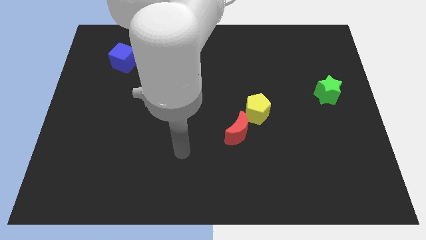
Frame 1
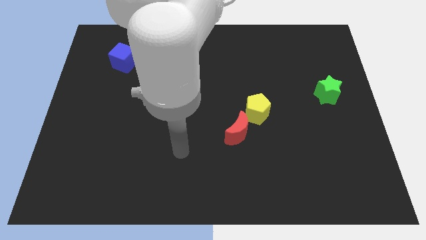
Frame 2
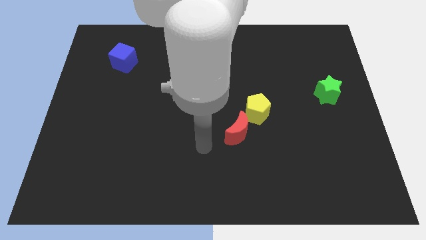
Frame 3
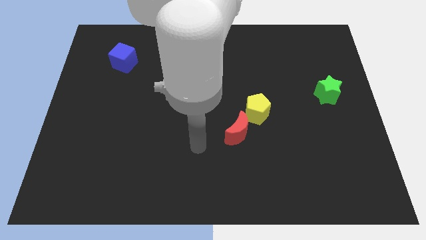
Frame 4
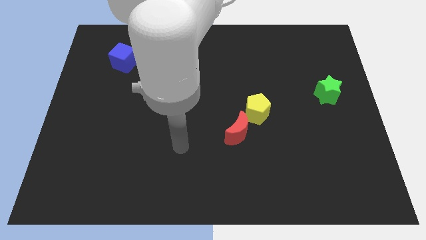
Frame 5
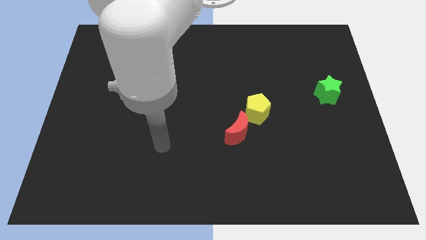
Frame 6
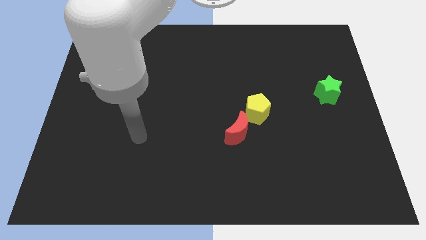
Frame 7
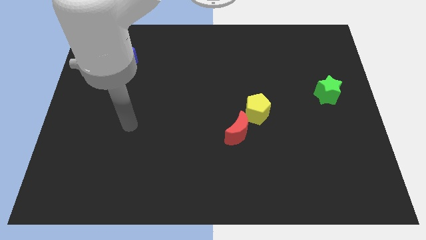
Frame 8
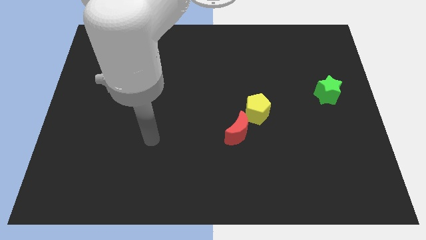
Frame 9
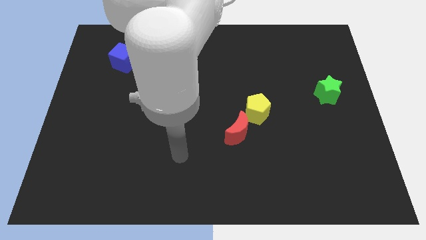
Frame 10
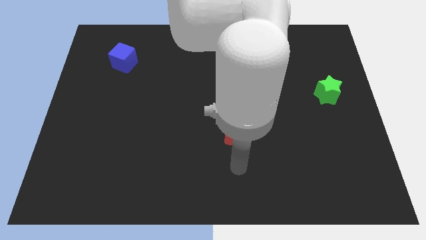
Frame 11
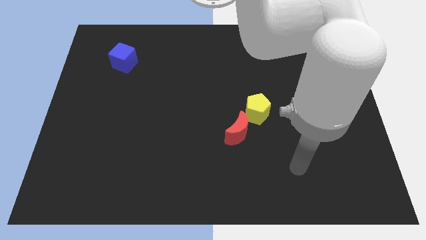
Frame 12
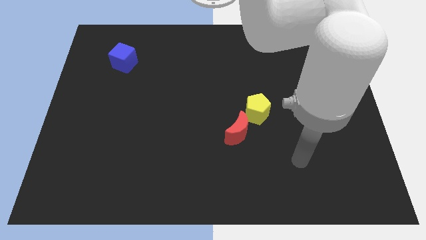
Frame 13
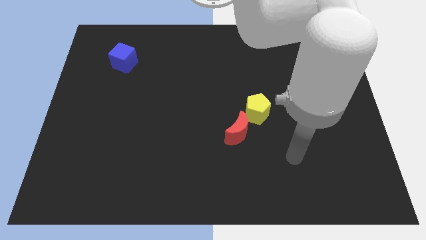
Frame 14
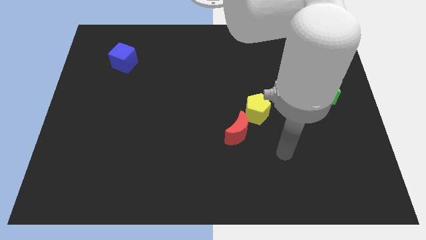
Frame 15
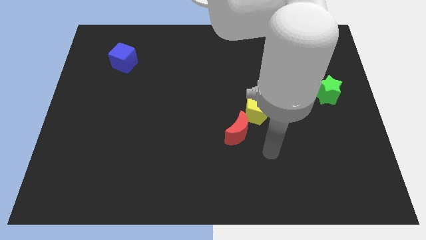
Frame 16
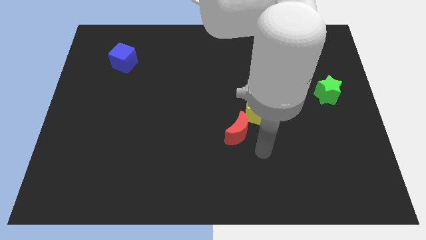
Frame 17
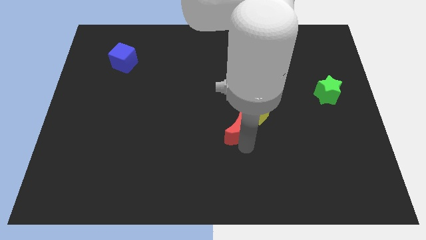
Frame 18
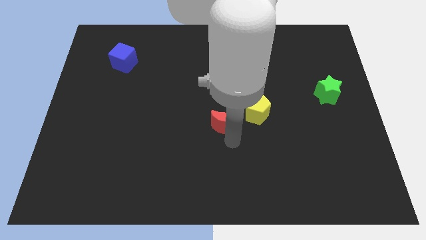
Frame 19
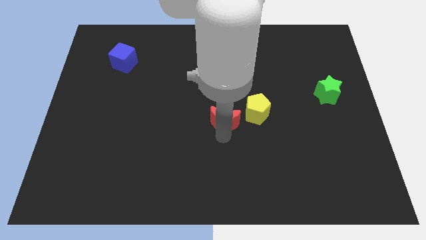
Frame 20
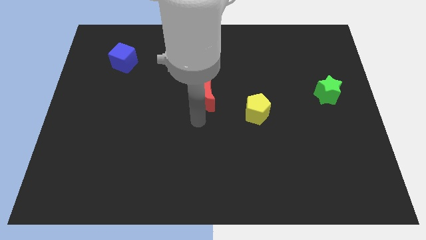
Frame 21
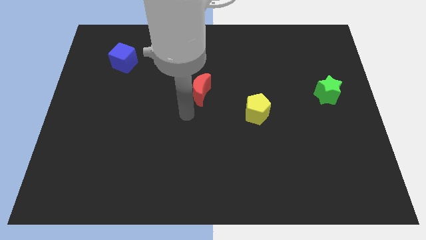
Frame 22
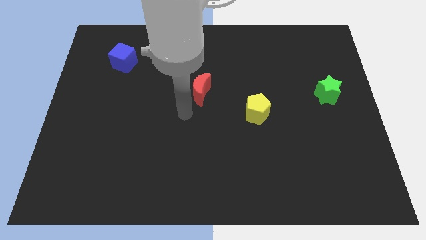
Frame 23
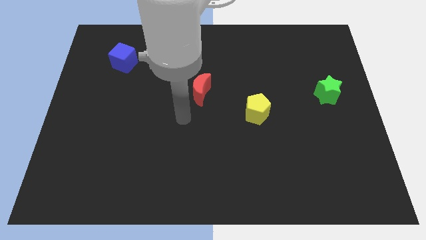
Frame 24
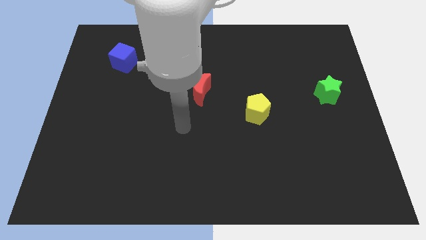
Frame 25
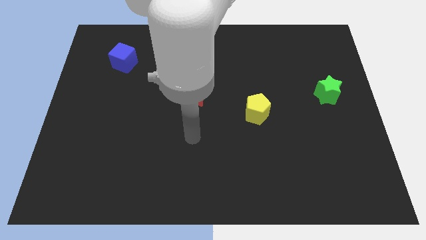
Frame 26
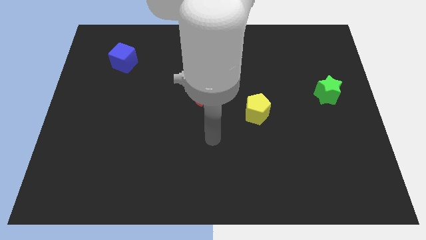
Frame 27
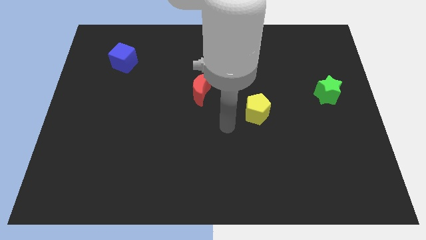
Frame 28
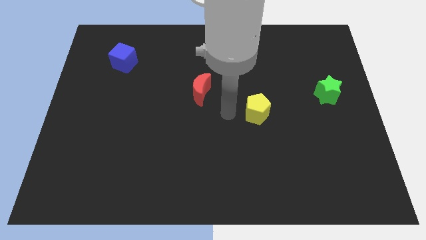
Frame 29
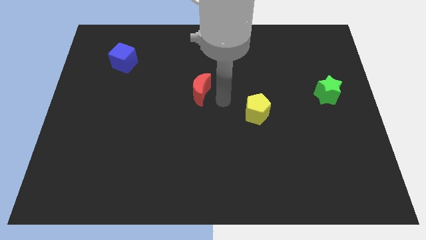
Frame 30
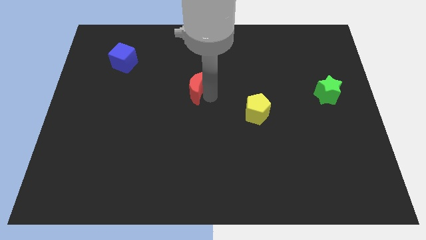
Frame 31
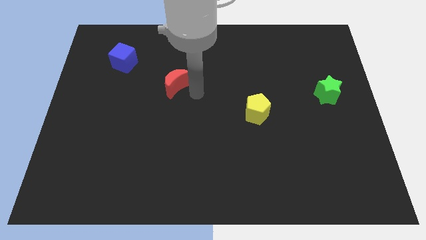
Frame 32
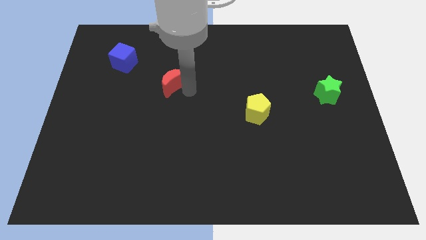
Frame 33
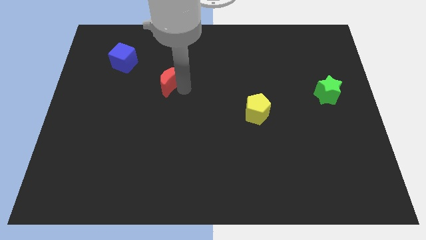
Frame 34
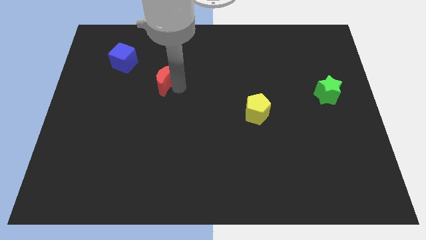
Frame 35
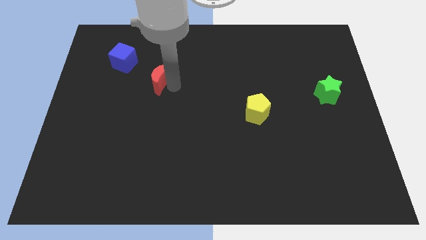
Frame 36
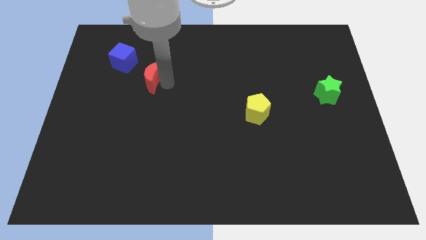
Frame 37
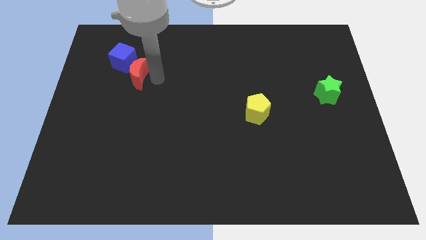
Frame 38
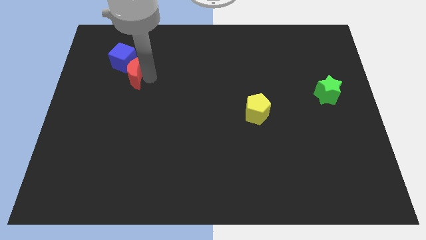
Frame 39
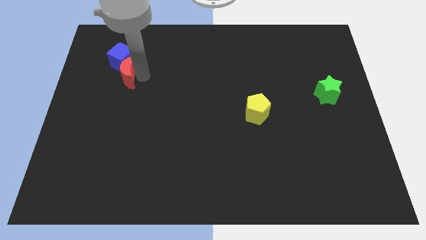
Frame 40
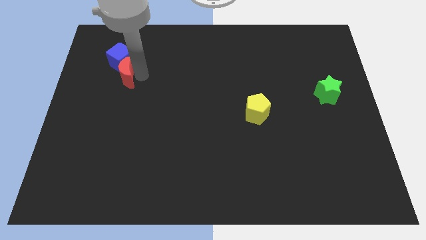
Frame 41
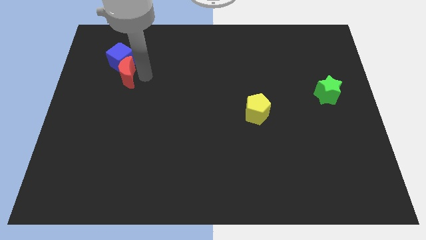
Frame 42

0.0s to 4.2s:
slide the red moon towards the blue block

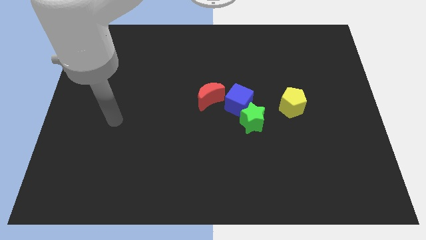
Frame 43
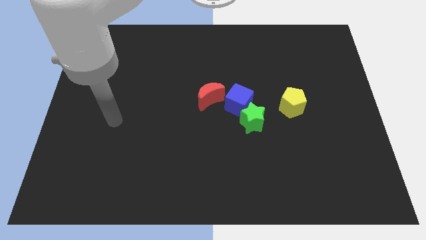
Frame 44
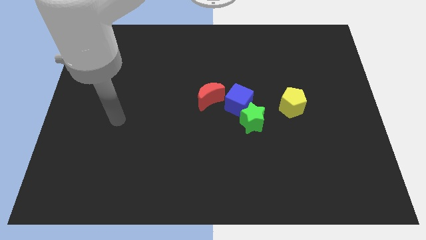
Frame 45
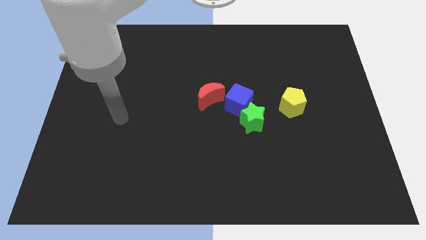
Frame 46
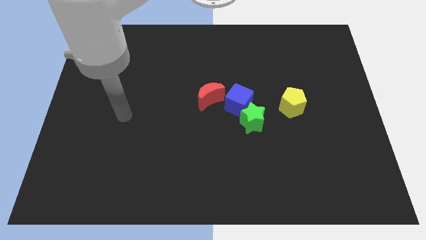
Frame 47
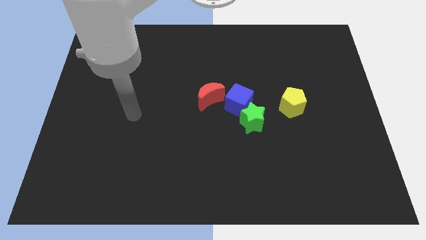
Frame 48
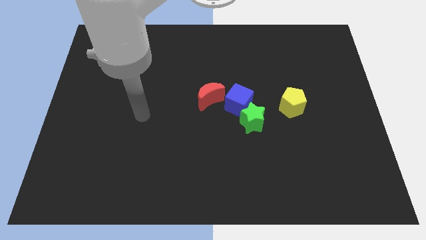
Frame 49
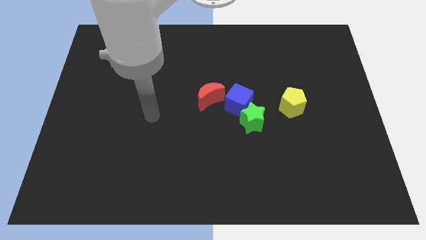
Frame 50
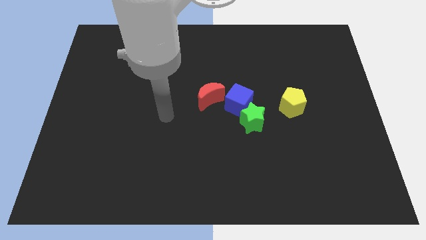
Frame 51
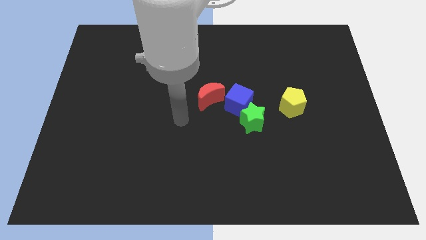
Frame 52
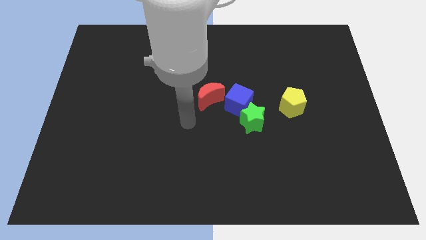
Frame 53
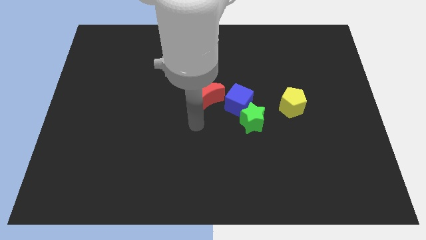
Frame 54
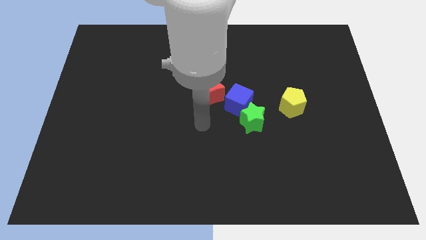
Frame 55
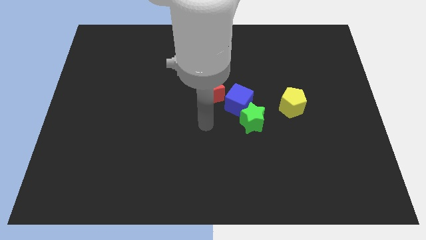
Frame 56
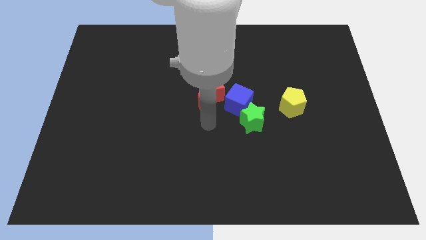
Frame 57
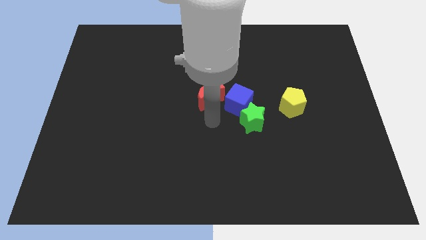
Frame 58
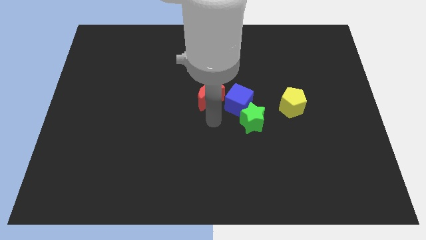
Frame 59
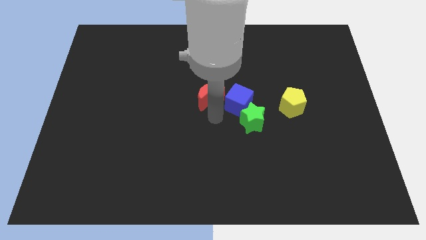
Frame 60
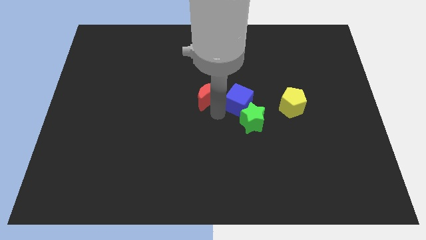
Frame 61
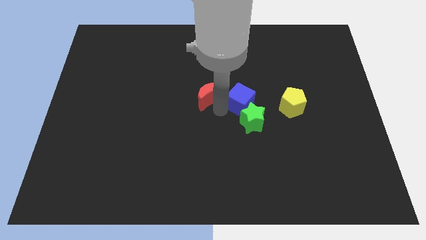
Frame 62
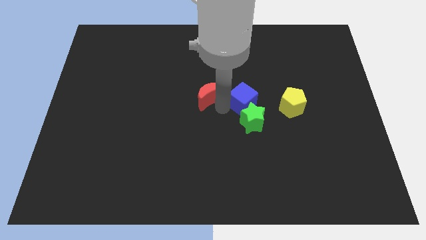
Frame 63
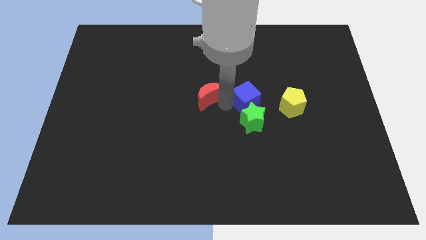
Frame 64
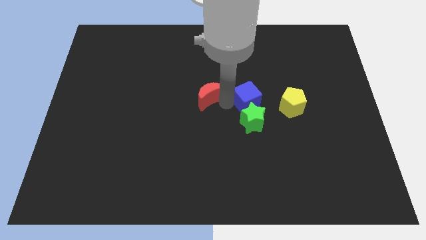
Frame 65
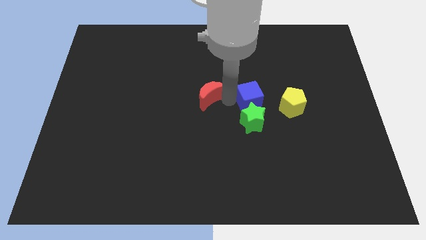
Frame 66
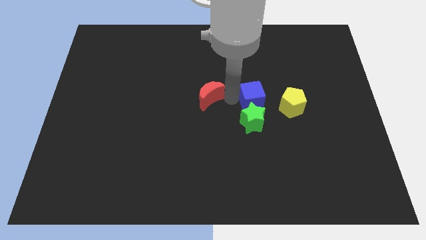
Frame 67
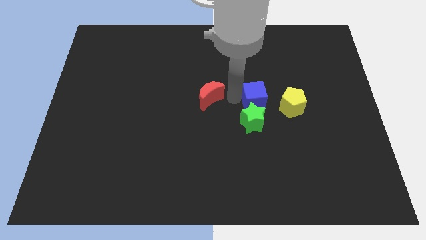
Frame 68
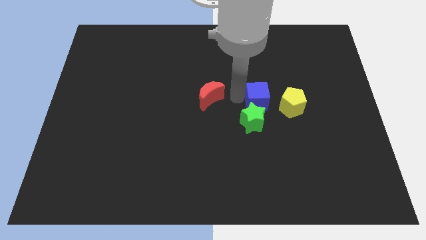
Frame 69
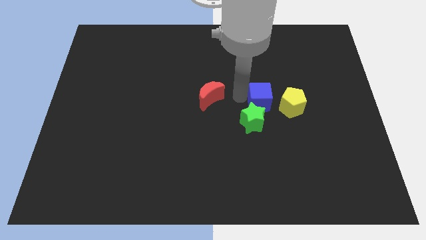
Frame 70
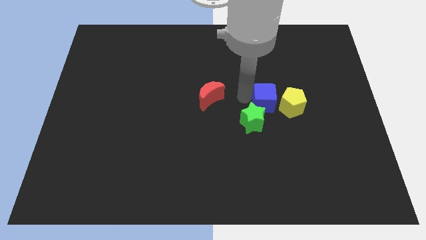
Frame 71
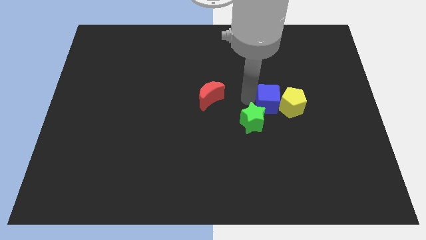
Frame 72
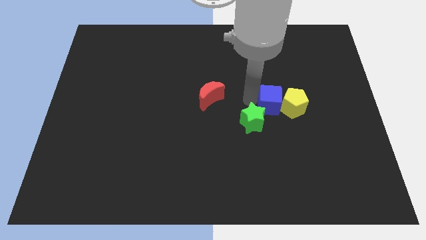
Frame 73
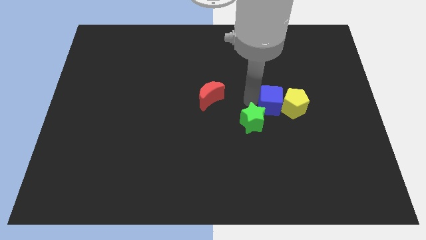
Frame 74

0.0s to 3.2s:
move the cube to the yellow pentagon

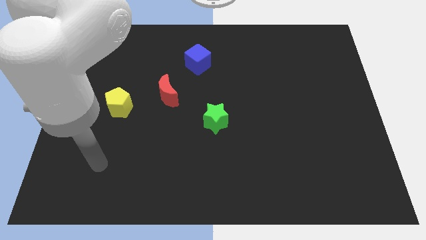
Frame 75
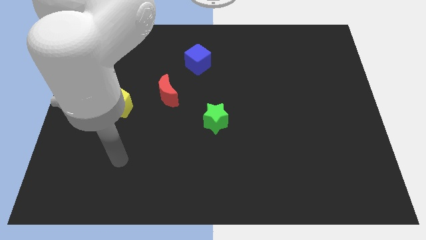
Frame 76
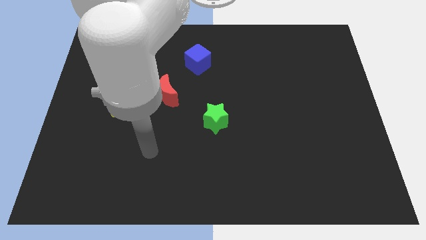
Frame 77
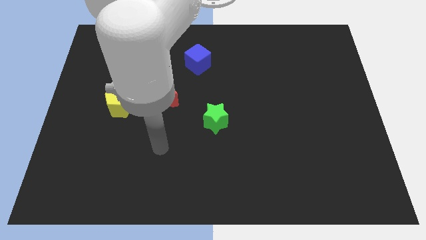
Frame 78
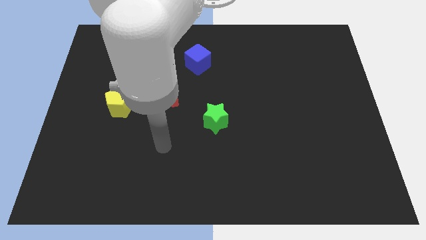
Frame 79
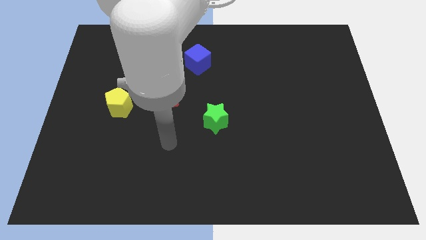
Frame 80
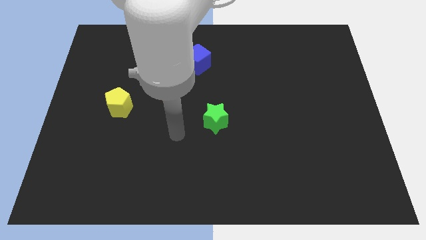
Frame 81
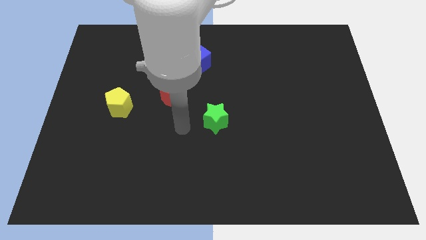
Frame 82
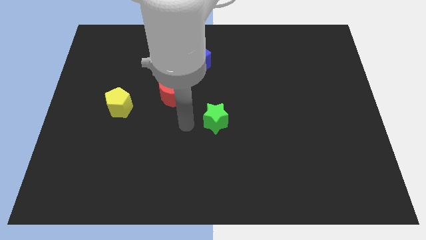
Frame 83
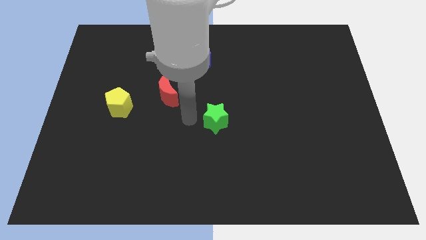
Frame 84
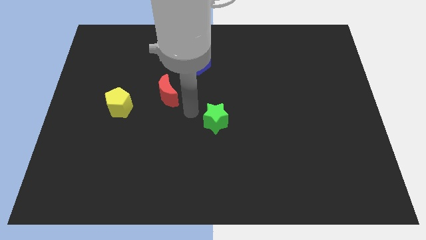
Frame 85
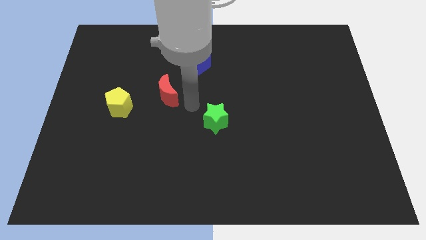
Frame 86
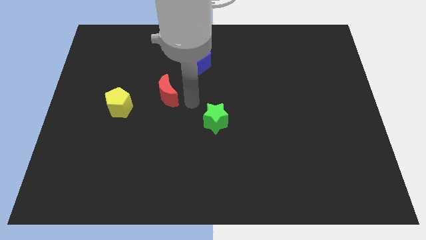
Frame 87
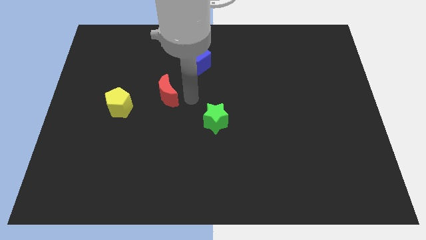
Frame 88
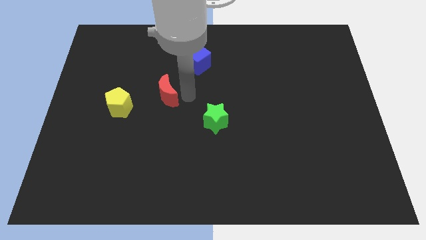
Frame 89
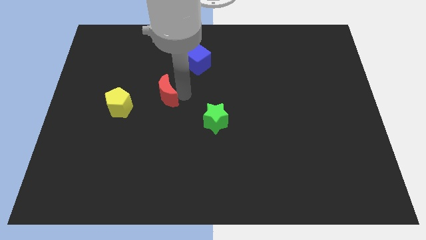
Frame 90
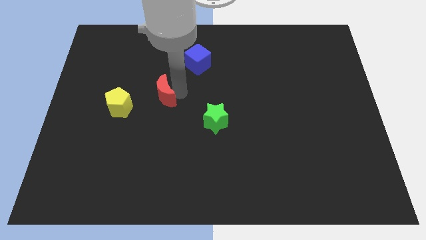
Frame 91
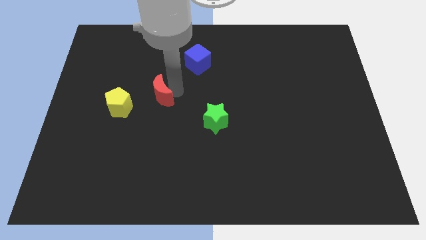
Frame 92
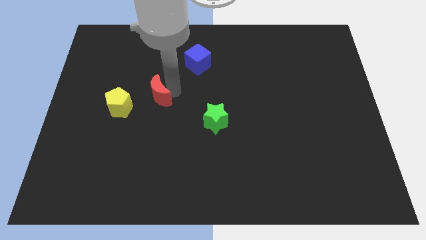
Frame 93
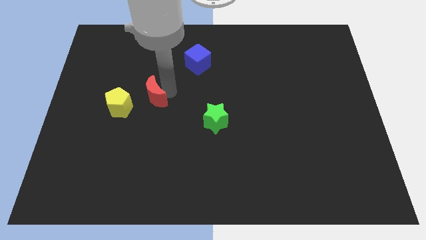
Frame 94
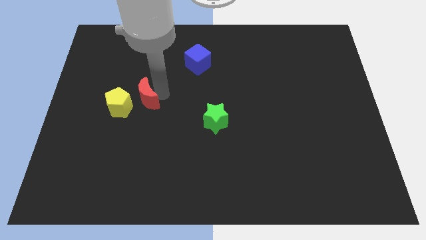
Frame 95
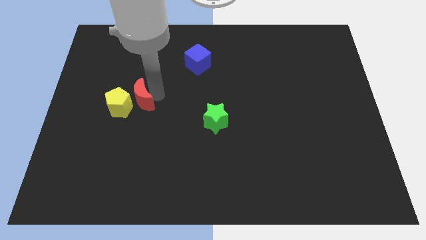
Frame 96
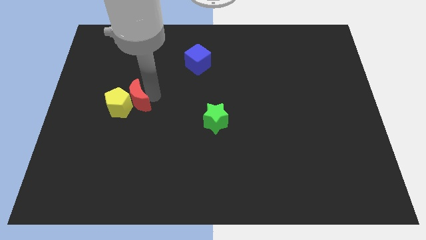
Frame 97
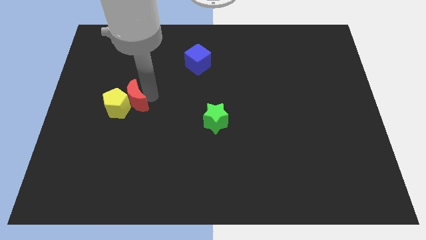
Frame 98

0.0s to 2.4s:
slide the red block close to the yellow block
